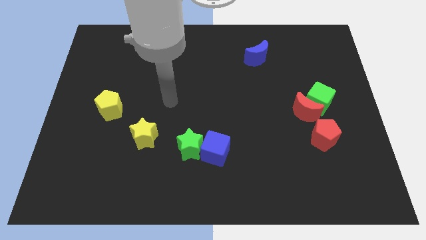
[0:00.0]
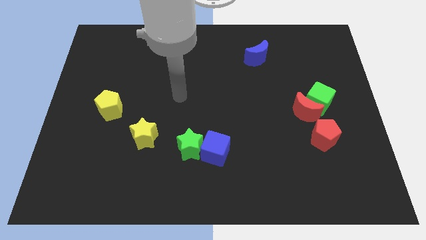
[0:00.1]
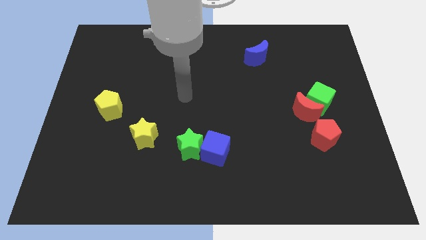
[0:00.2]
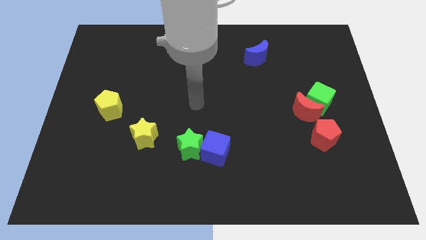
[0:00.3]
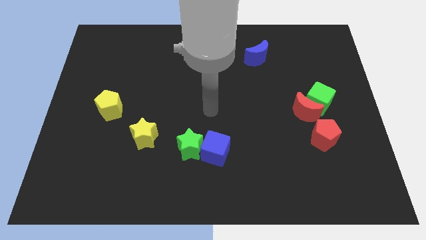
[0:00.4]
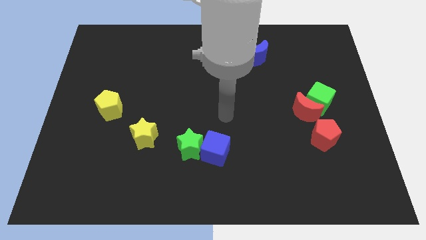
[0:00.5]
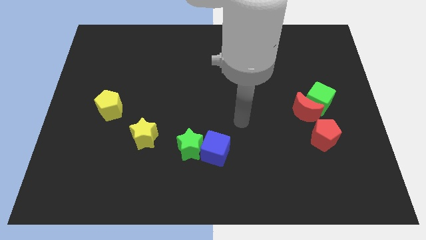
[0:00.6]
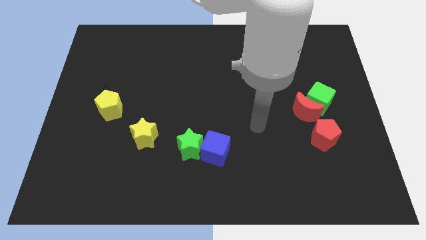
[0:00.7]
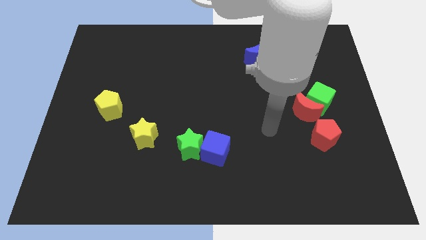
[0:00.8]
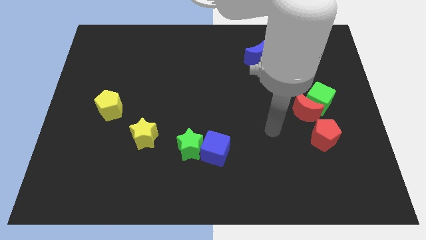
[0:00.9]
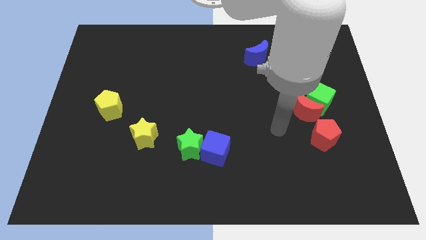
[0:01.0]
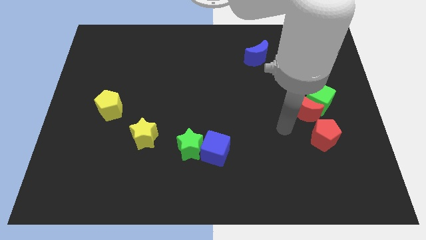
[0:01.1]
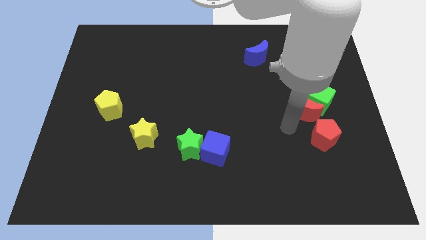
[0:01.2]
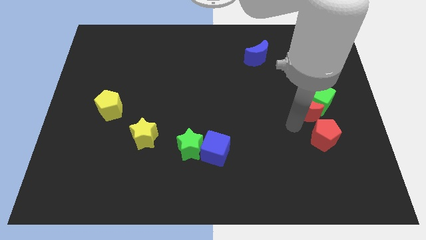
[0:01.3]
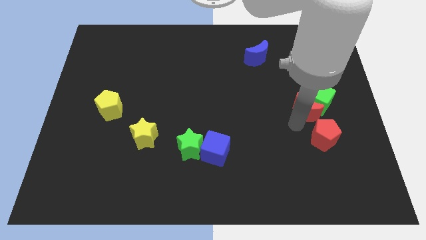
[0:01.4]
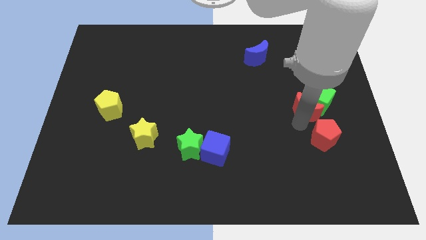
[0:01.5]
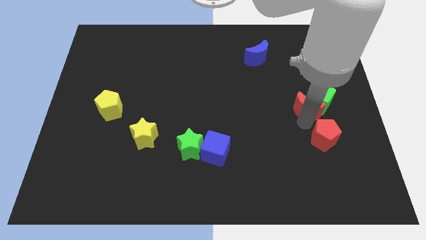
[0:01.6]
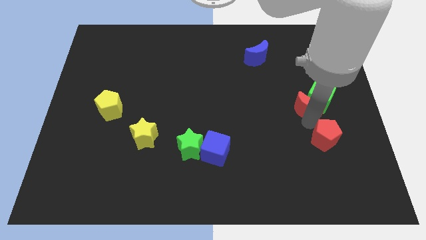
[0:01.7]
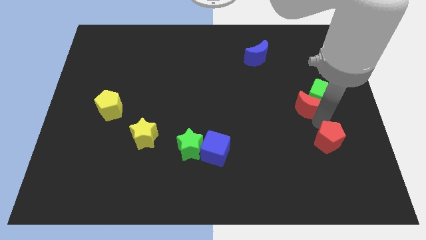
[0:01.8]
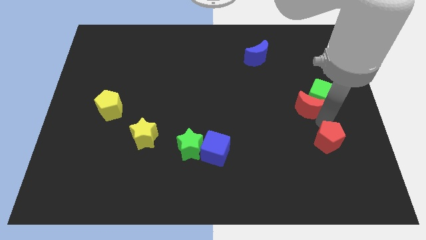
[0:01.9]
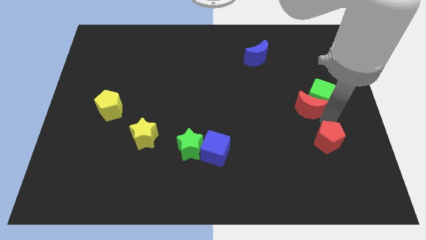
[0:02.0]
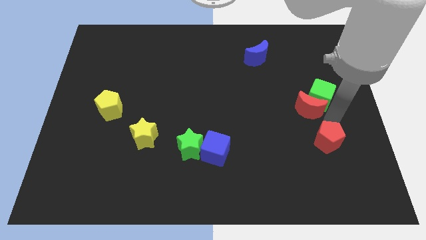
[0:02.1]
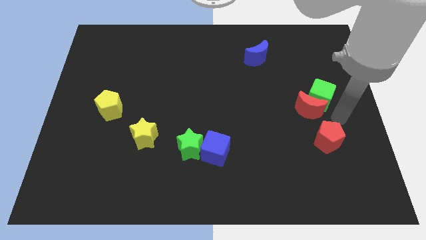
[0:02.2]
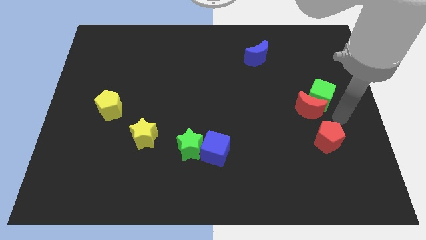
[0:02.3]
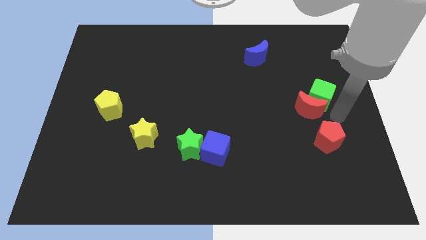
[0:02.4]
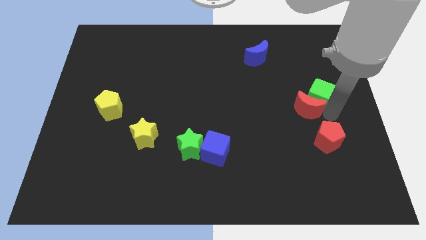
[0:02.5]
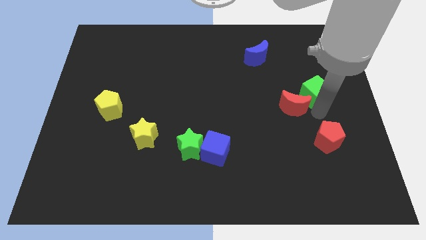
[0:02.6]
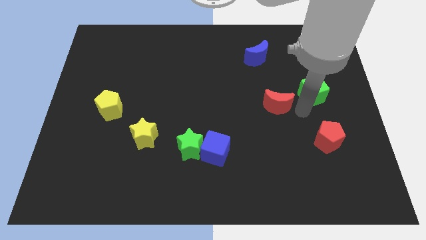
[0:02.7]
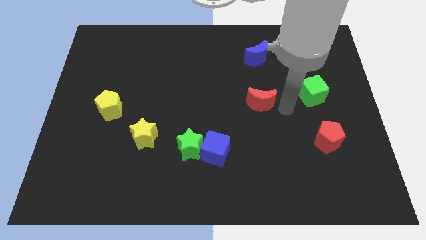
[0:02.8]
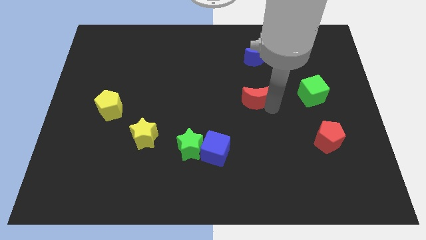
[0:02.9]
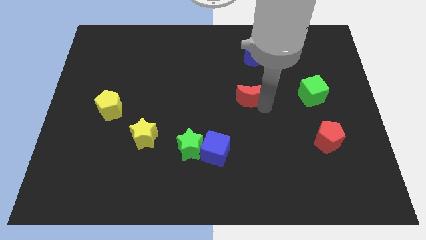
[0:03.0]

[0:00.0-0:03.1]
separate red moon from green cube

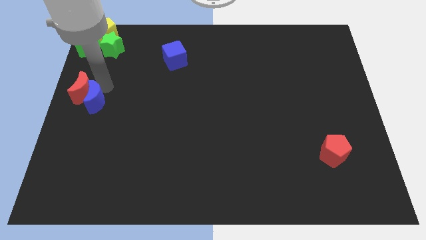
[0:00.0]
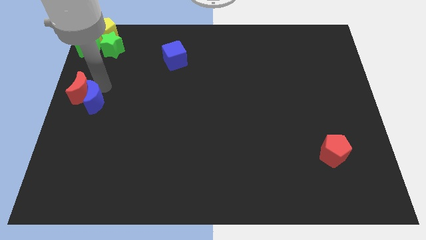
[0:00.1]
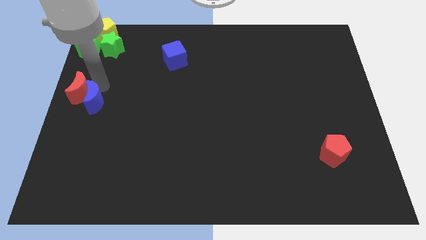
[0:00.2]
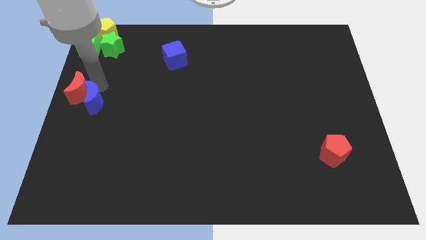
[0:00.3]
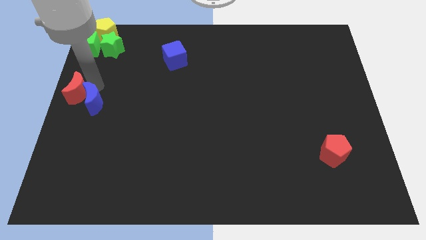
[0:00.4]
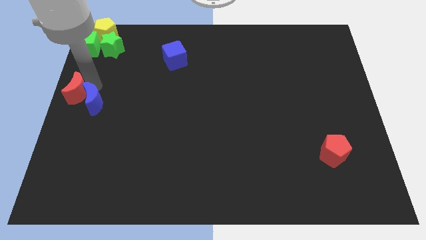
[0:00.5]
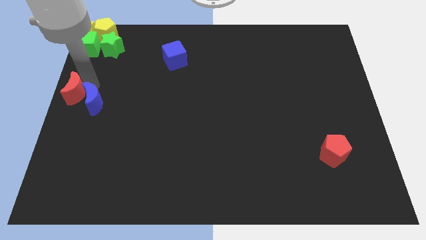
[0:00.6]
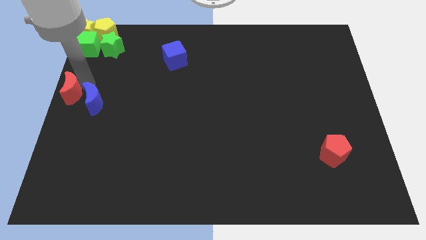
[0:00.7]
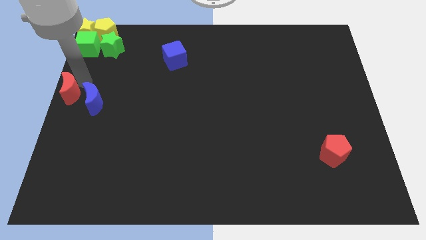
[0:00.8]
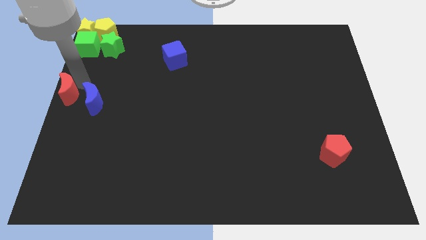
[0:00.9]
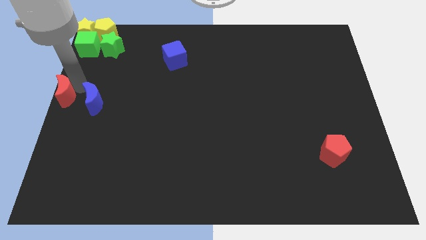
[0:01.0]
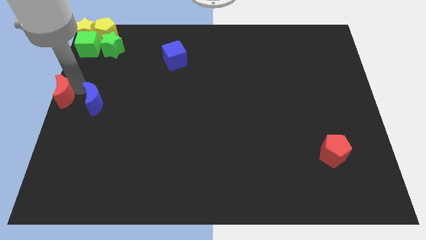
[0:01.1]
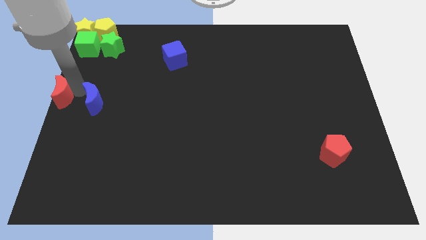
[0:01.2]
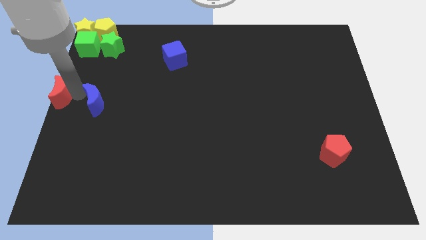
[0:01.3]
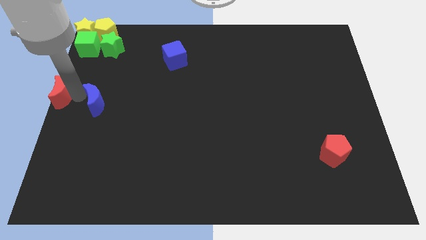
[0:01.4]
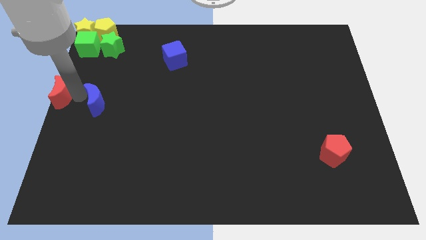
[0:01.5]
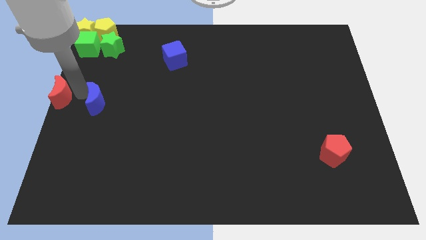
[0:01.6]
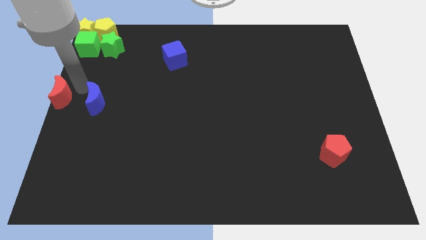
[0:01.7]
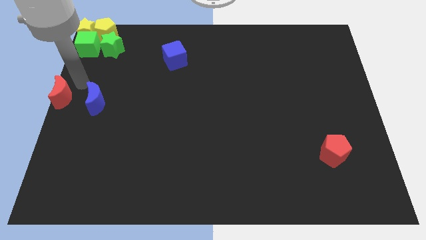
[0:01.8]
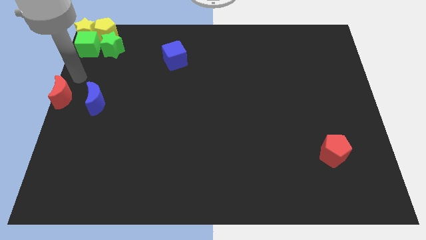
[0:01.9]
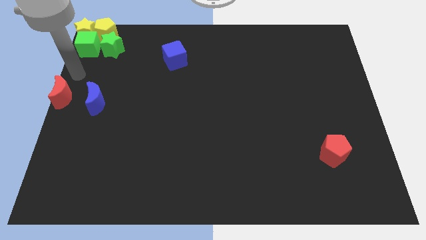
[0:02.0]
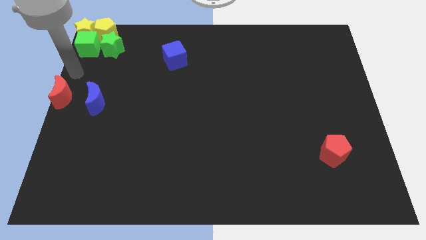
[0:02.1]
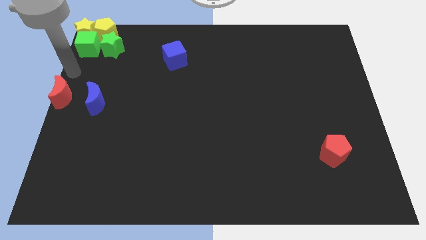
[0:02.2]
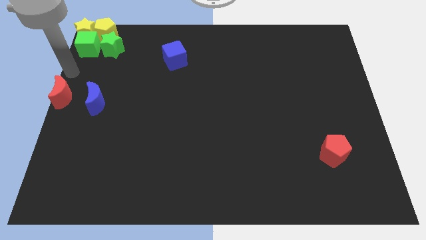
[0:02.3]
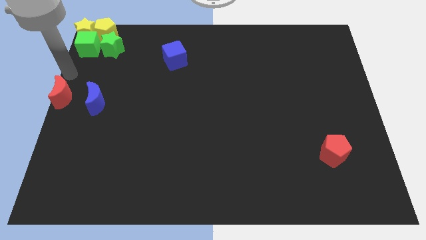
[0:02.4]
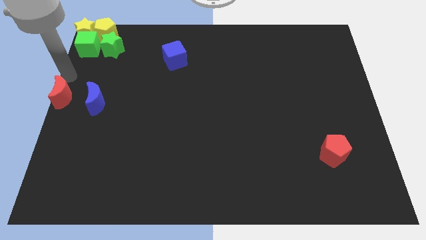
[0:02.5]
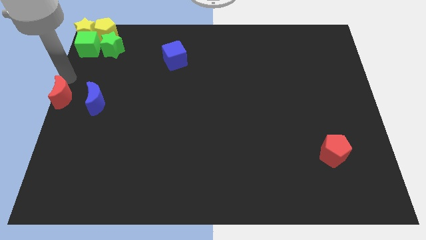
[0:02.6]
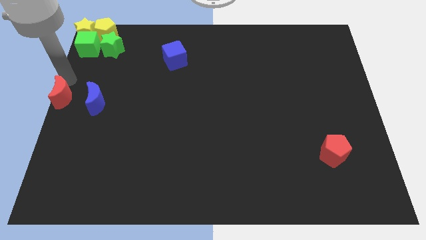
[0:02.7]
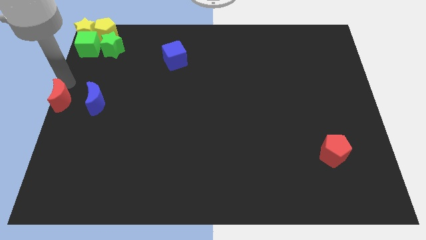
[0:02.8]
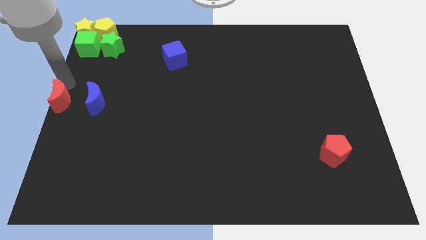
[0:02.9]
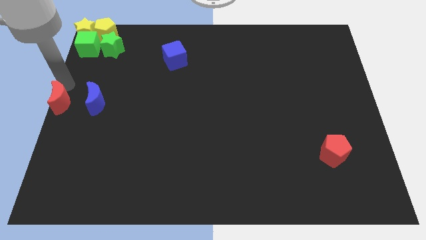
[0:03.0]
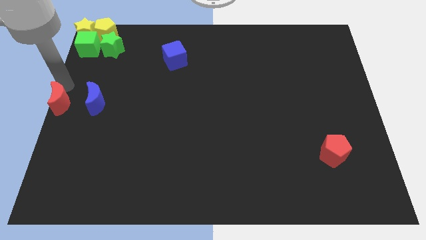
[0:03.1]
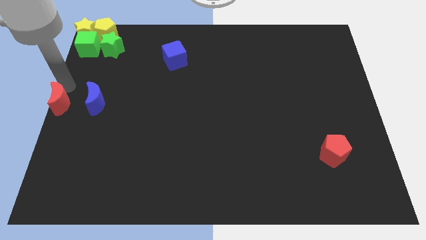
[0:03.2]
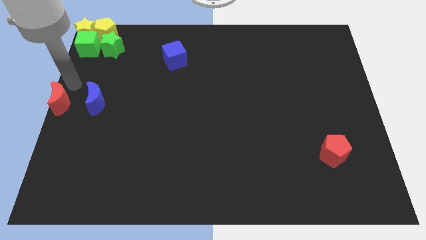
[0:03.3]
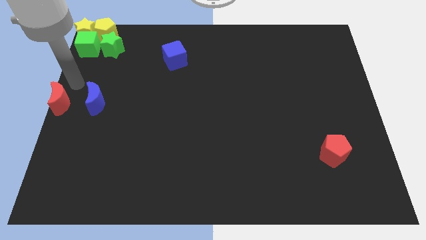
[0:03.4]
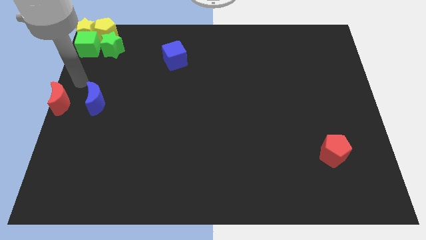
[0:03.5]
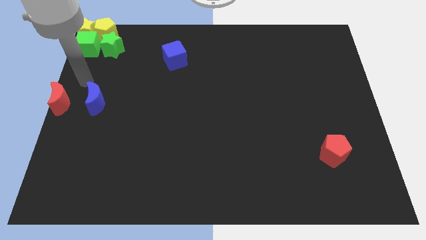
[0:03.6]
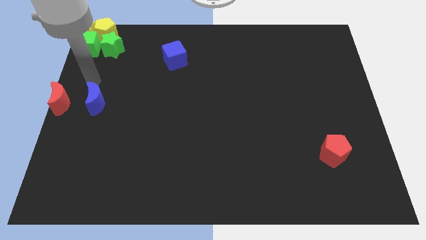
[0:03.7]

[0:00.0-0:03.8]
separate red moon away from blue moon

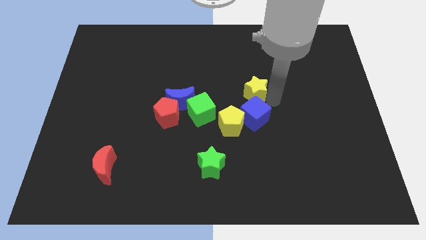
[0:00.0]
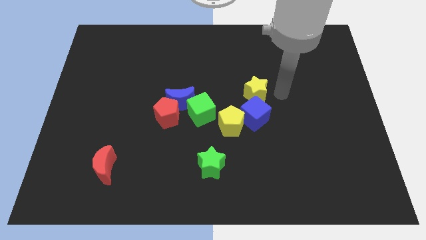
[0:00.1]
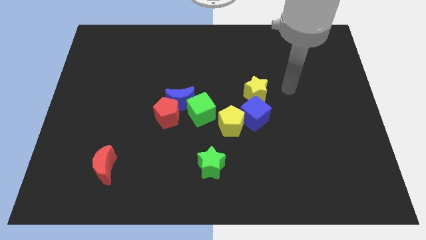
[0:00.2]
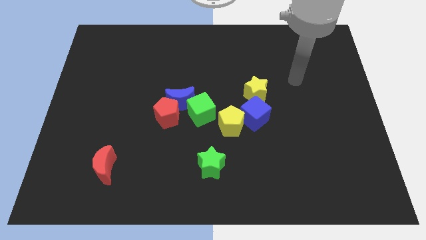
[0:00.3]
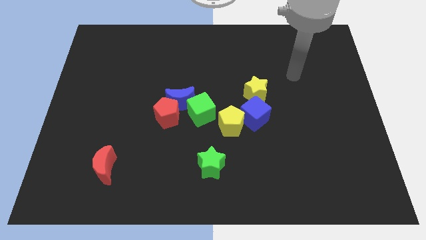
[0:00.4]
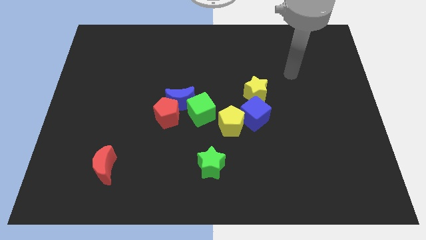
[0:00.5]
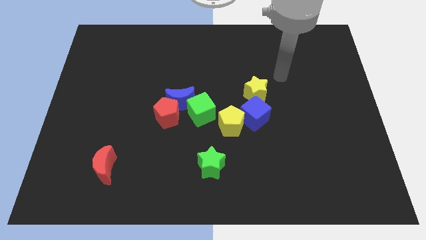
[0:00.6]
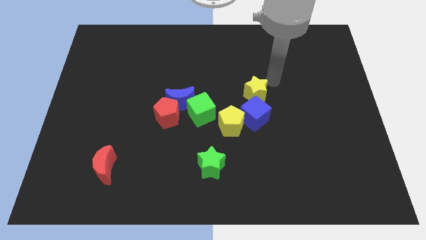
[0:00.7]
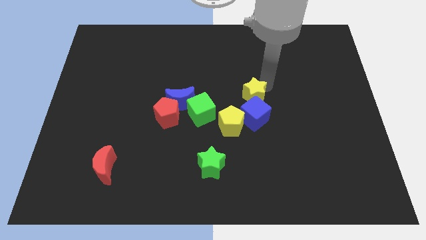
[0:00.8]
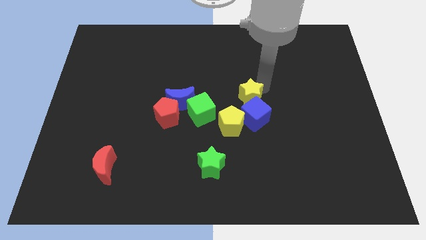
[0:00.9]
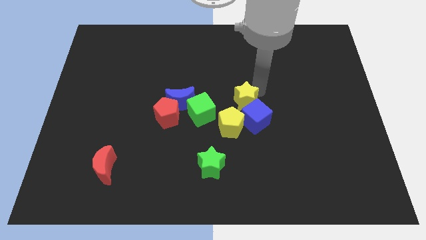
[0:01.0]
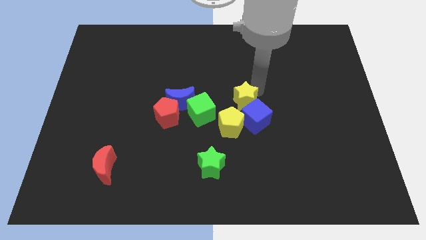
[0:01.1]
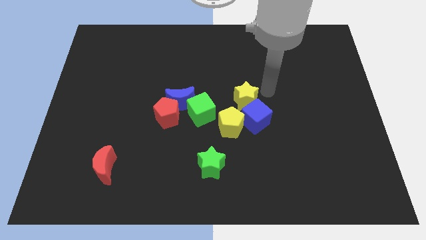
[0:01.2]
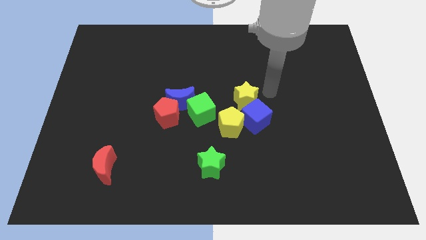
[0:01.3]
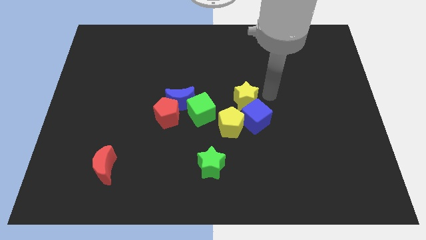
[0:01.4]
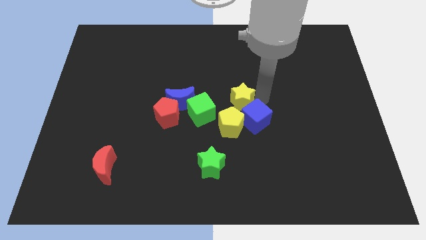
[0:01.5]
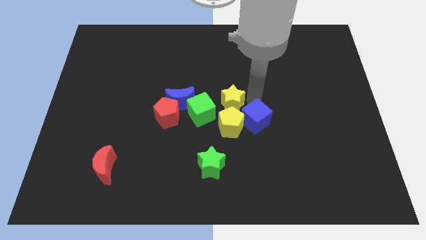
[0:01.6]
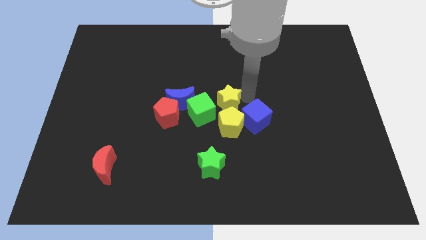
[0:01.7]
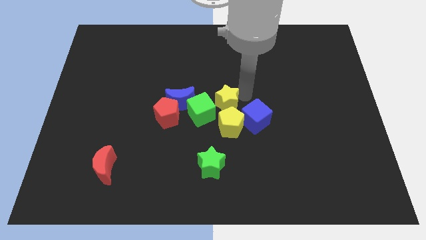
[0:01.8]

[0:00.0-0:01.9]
push the yellow star to the center of the board

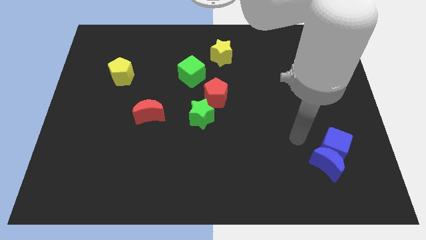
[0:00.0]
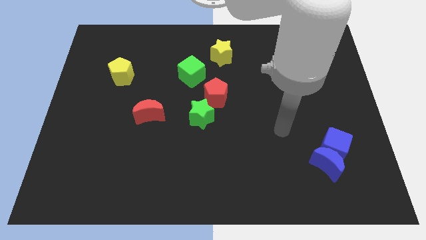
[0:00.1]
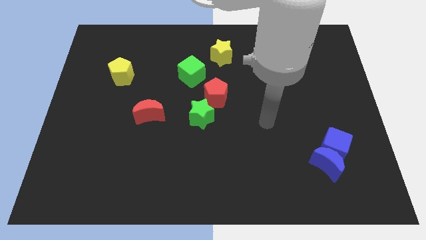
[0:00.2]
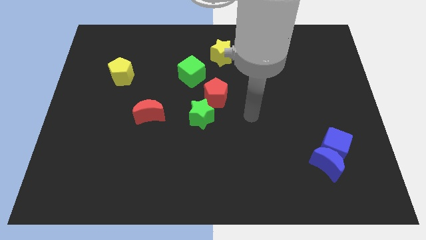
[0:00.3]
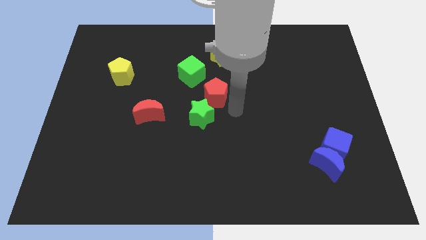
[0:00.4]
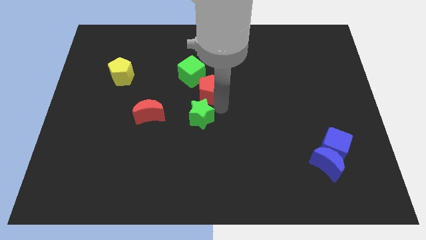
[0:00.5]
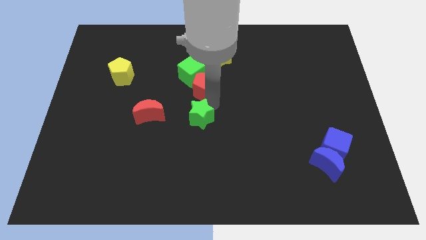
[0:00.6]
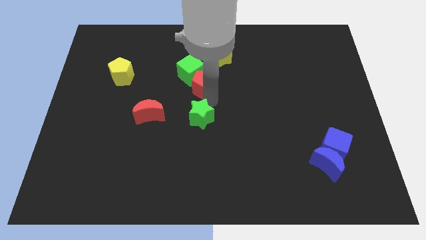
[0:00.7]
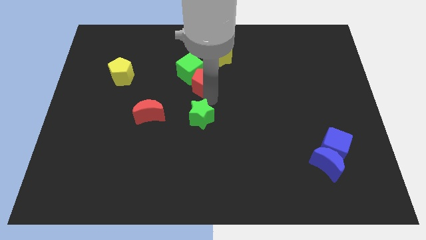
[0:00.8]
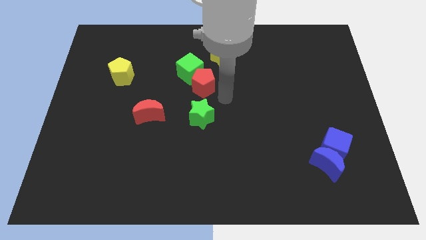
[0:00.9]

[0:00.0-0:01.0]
push the red pentagon into the green cube
